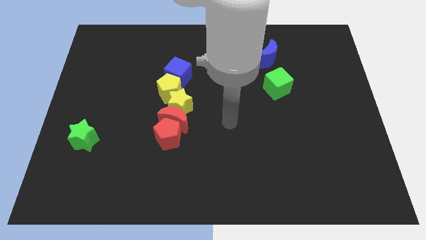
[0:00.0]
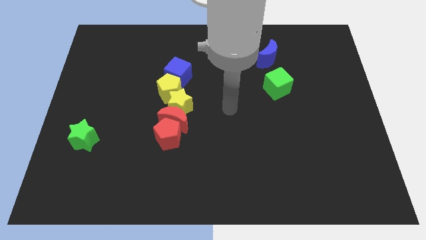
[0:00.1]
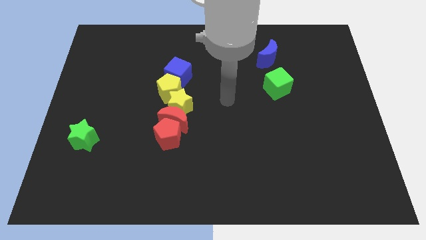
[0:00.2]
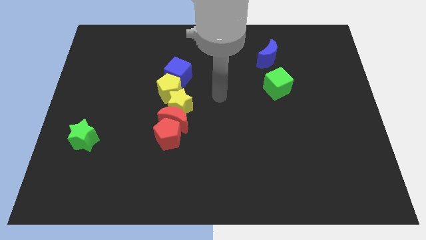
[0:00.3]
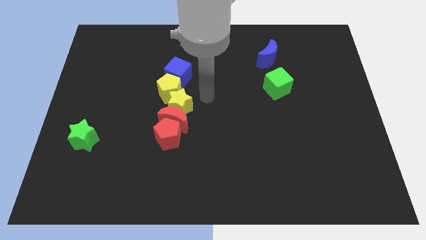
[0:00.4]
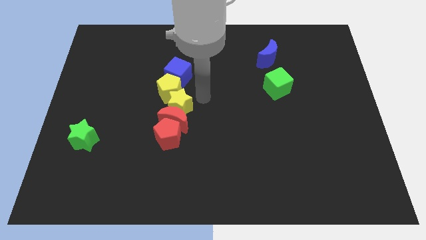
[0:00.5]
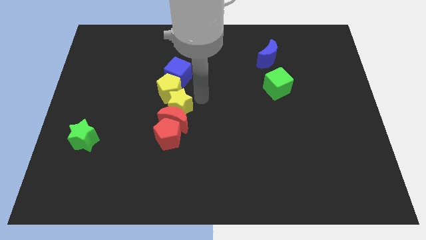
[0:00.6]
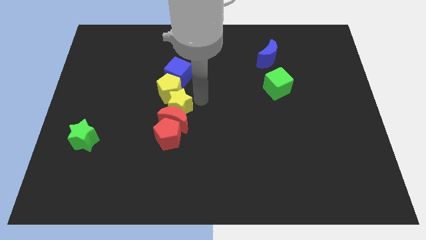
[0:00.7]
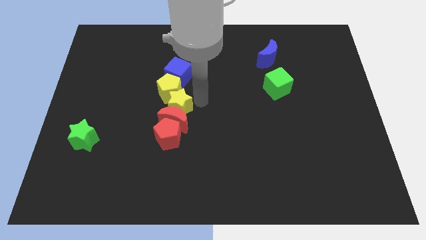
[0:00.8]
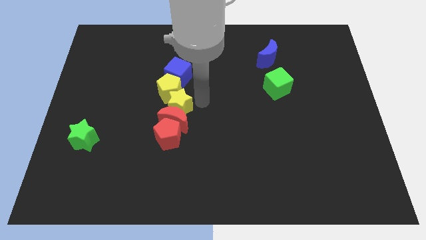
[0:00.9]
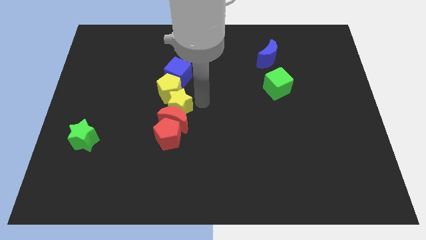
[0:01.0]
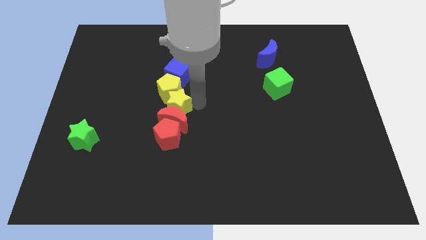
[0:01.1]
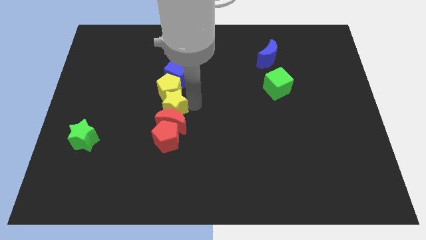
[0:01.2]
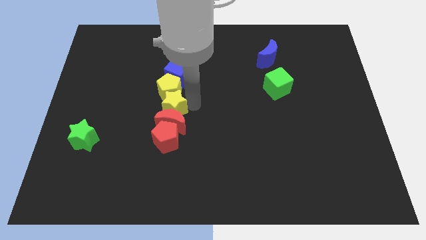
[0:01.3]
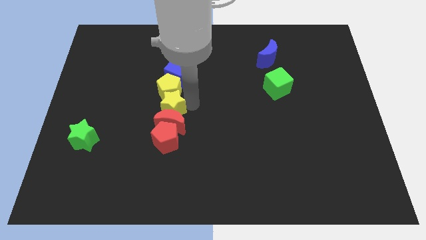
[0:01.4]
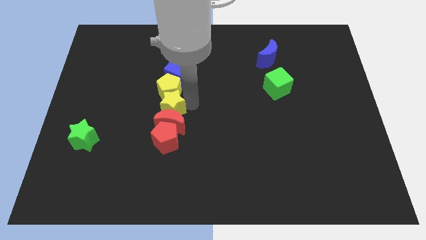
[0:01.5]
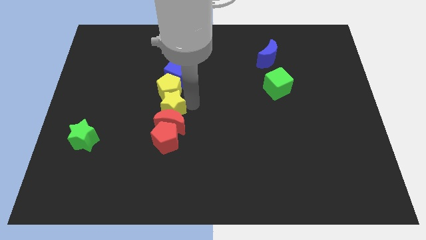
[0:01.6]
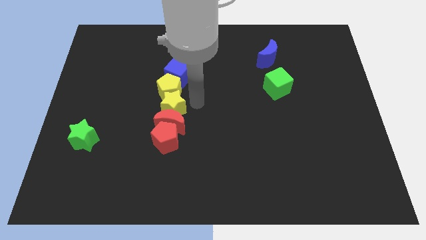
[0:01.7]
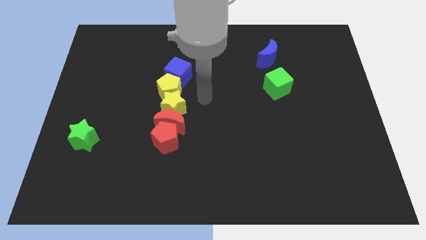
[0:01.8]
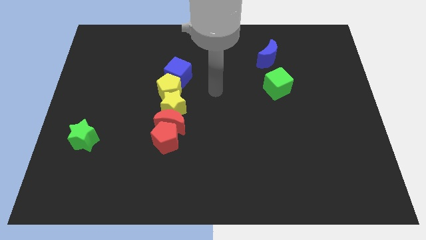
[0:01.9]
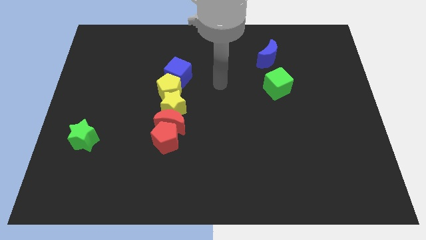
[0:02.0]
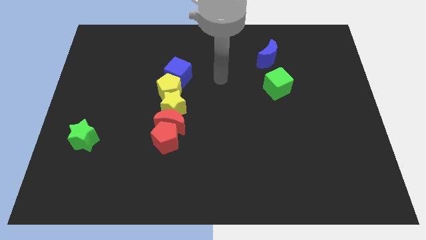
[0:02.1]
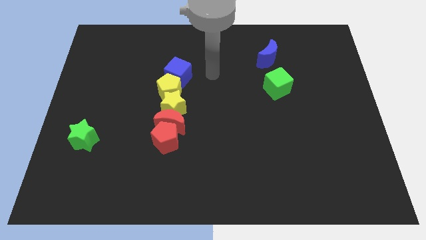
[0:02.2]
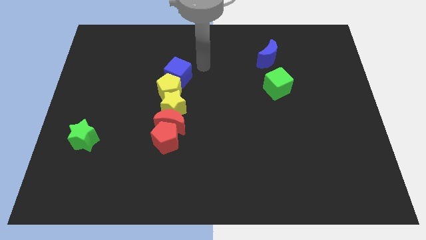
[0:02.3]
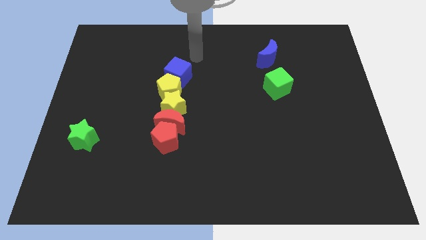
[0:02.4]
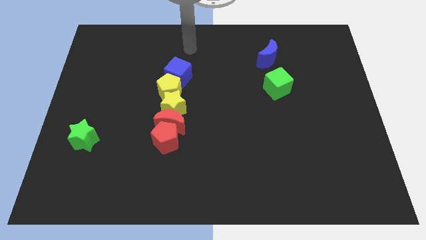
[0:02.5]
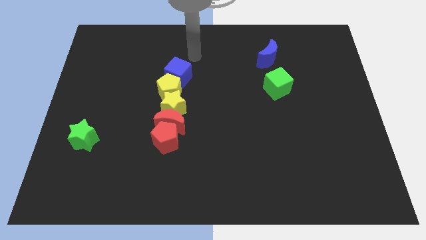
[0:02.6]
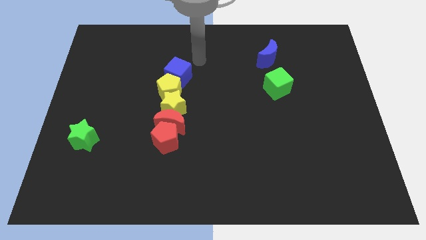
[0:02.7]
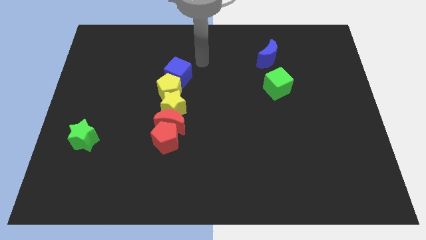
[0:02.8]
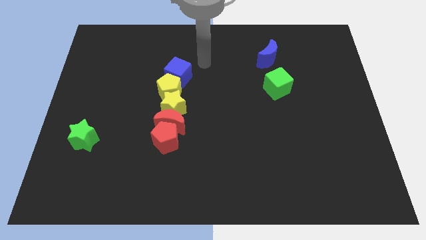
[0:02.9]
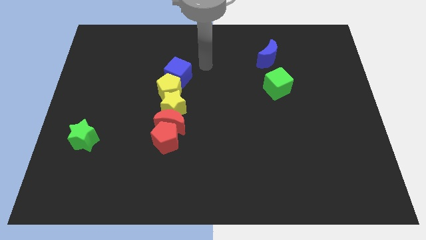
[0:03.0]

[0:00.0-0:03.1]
slide the yellow star in between the yellow pentagon and red moon

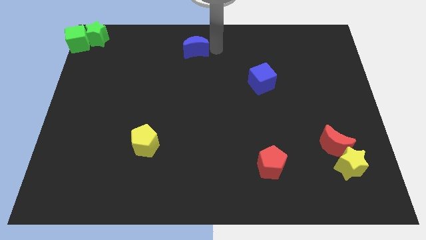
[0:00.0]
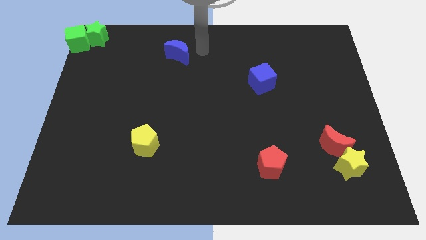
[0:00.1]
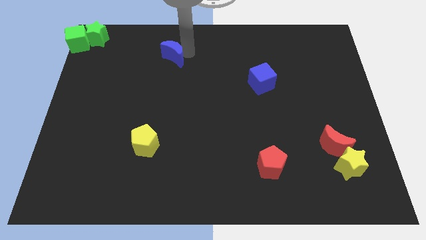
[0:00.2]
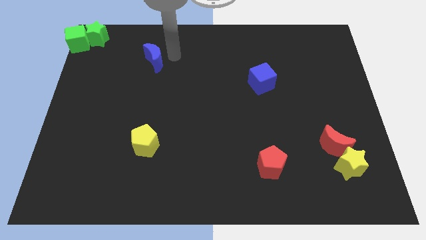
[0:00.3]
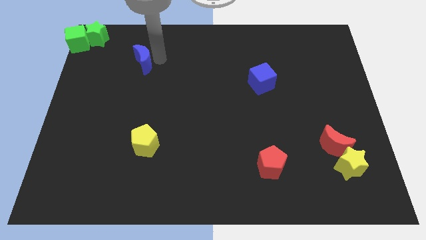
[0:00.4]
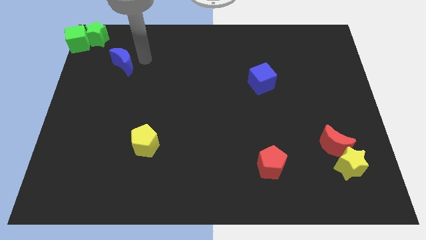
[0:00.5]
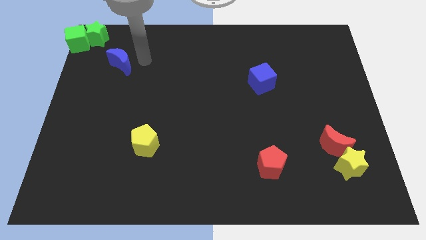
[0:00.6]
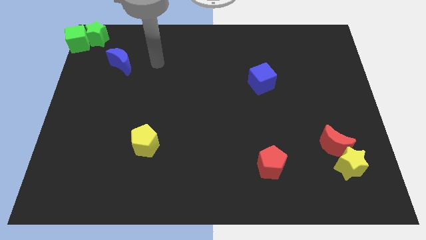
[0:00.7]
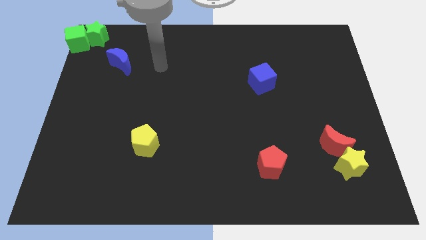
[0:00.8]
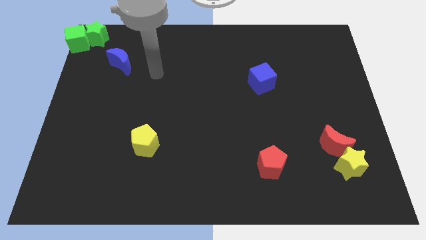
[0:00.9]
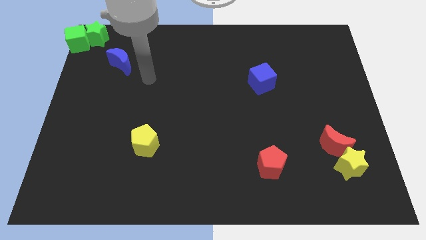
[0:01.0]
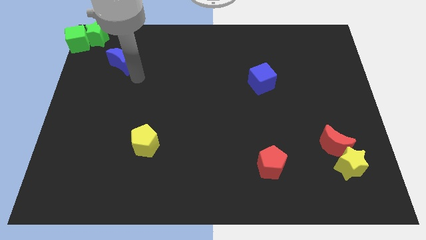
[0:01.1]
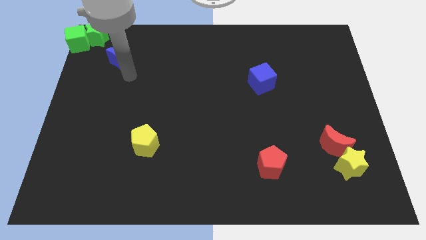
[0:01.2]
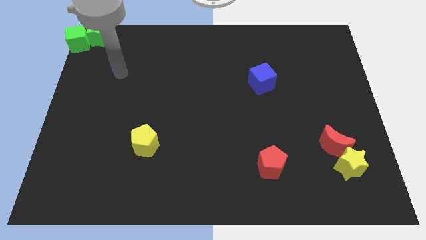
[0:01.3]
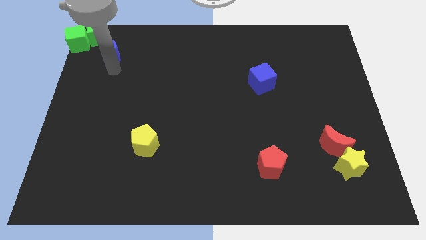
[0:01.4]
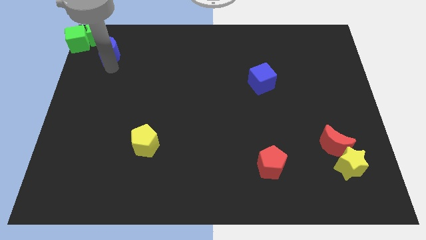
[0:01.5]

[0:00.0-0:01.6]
place the blue moon diagonally to the green star

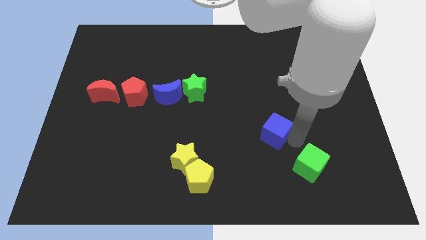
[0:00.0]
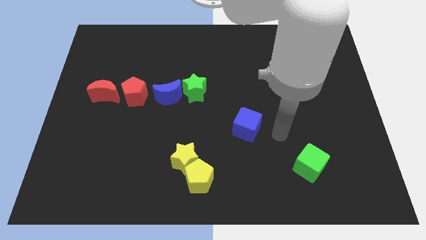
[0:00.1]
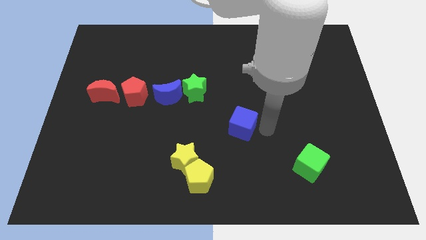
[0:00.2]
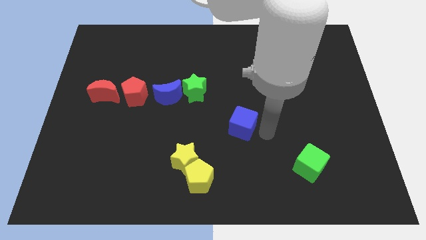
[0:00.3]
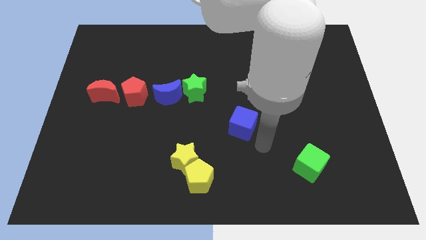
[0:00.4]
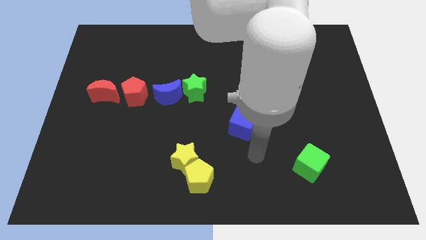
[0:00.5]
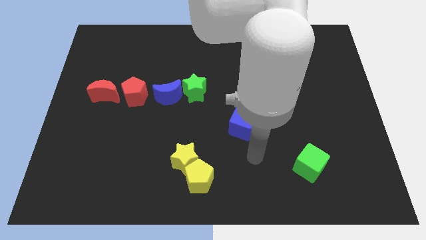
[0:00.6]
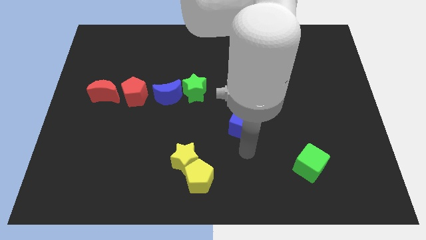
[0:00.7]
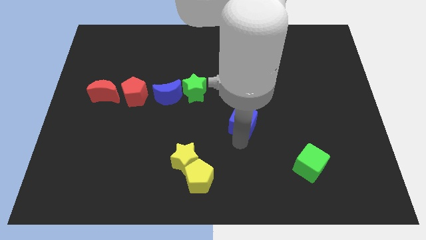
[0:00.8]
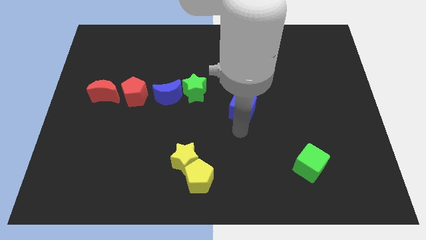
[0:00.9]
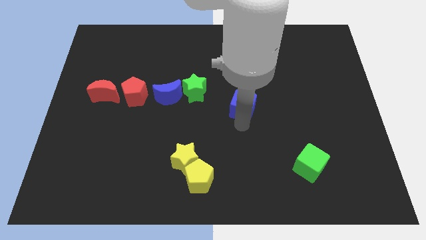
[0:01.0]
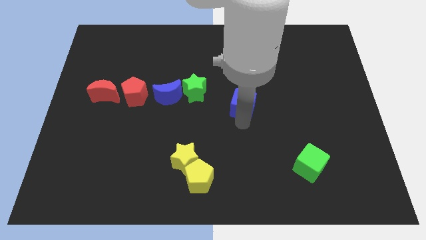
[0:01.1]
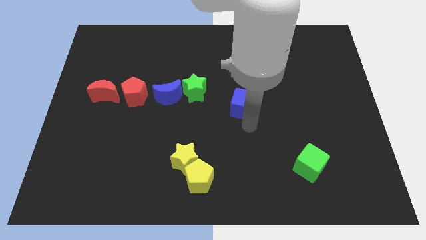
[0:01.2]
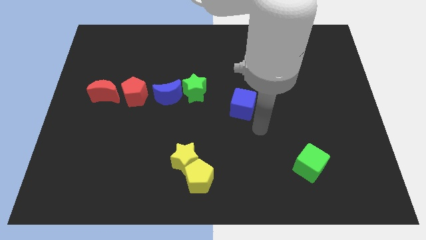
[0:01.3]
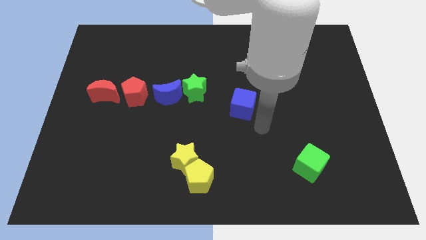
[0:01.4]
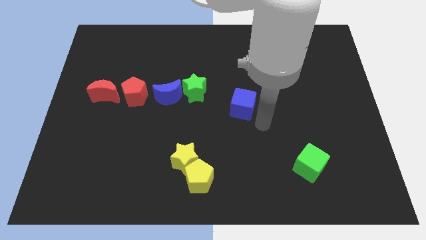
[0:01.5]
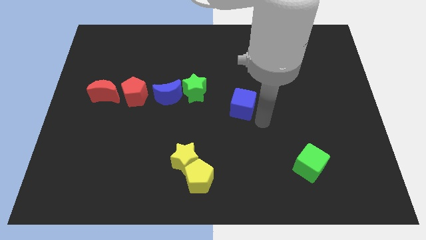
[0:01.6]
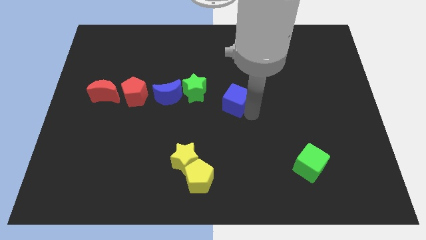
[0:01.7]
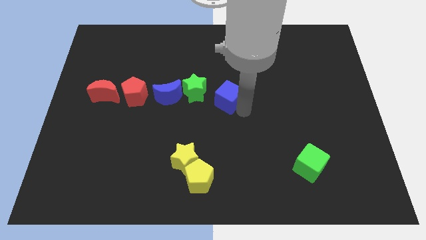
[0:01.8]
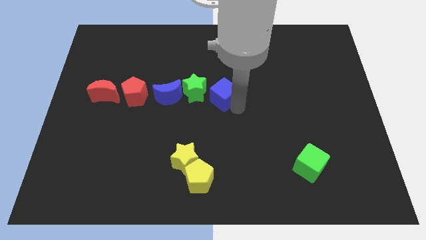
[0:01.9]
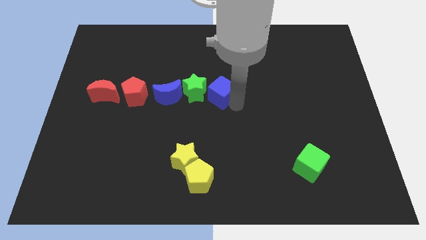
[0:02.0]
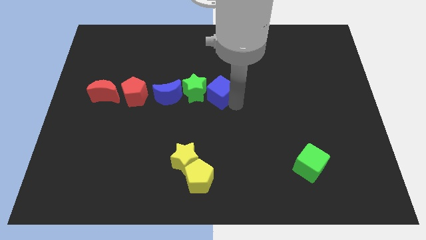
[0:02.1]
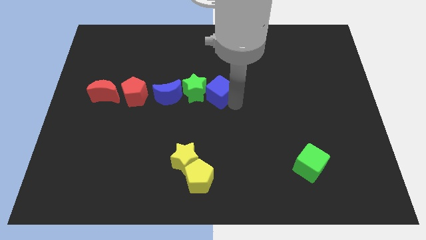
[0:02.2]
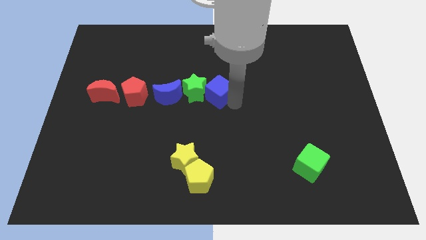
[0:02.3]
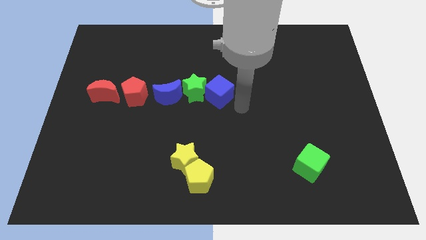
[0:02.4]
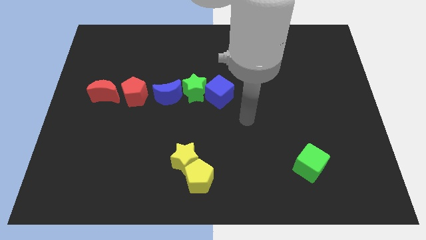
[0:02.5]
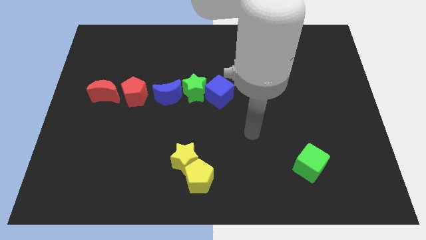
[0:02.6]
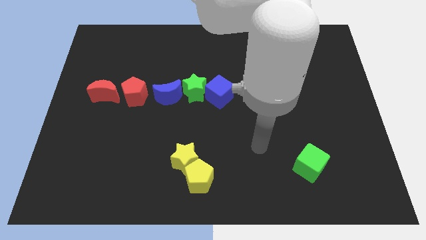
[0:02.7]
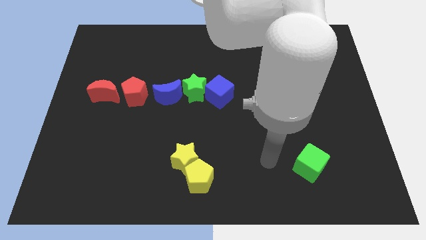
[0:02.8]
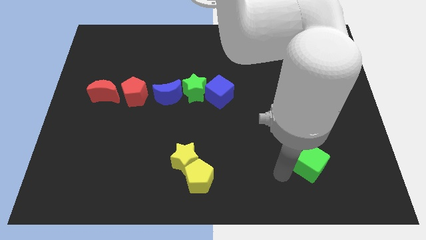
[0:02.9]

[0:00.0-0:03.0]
move blue cube to the right of the green star

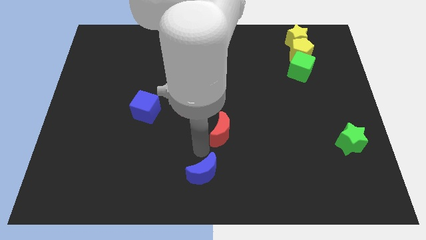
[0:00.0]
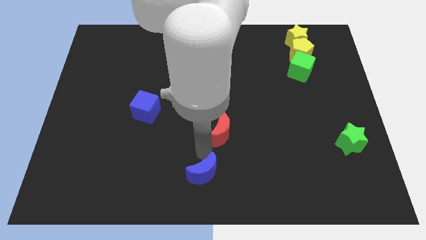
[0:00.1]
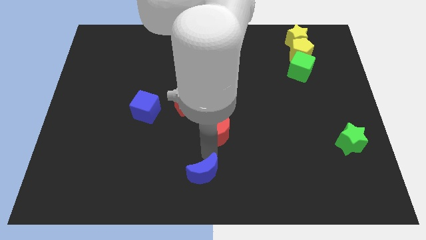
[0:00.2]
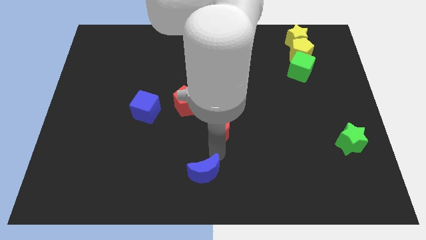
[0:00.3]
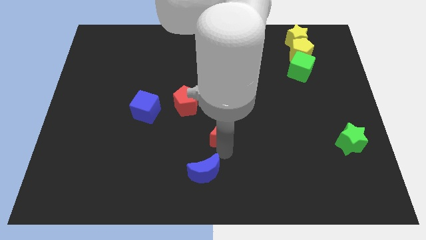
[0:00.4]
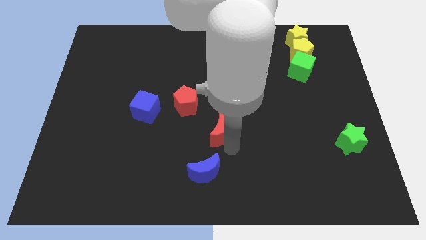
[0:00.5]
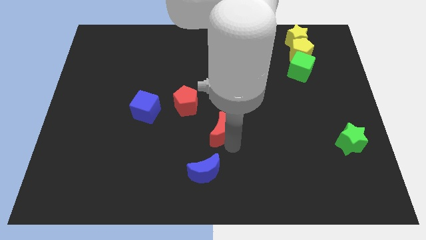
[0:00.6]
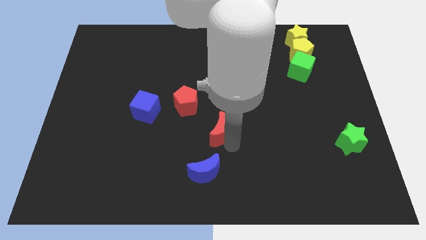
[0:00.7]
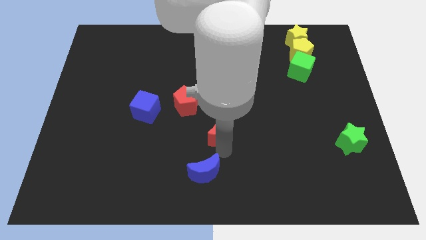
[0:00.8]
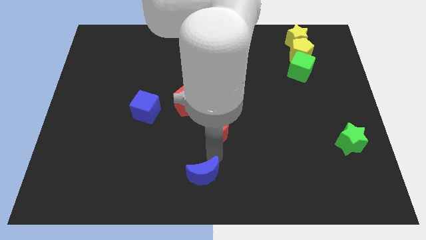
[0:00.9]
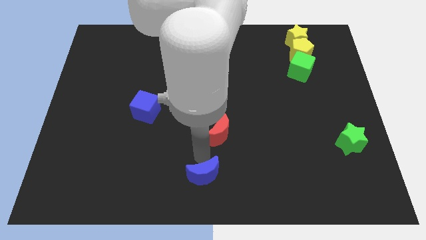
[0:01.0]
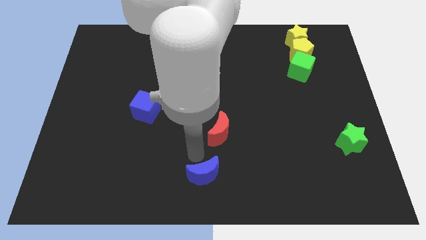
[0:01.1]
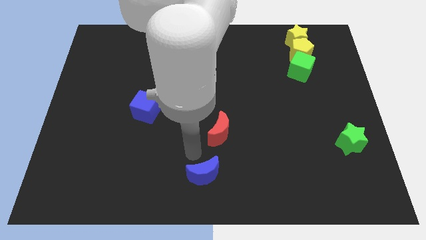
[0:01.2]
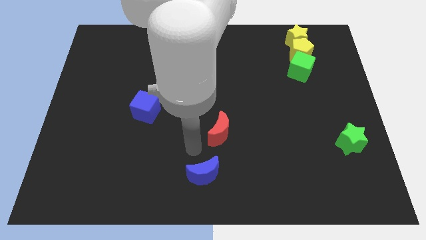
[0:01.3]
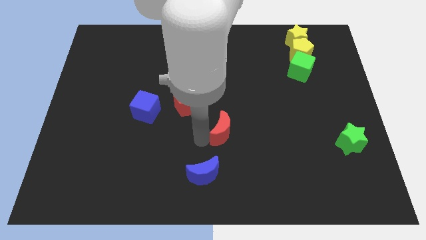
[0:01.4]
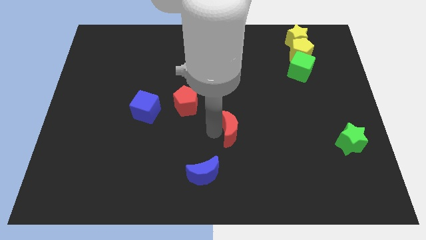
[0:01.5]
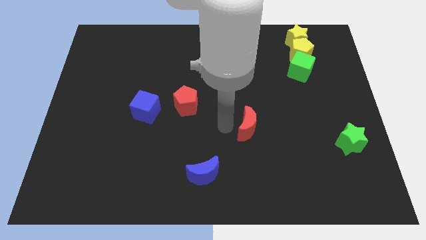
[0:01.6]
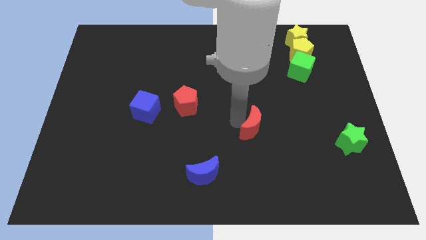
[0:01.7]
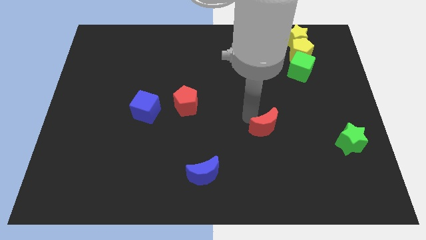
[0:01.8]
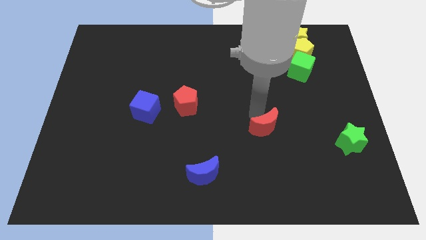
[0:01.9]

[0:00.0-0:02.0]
place the red moon in between the red pentagon and green star
